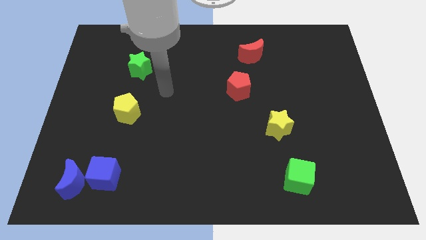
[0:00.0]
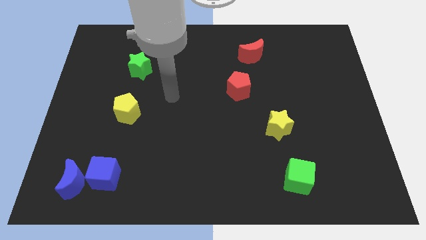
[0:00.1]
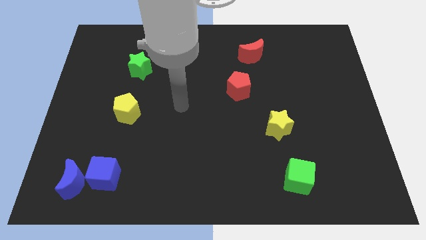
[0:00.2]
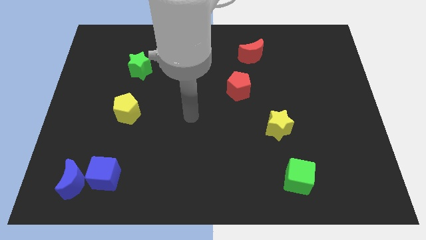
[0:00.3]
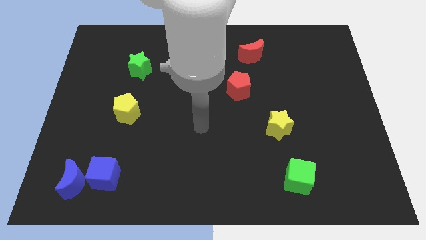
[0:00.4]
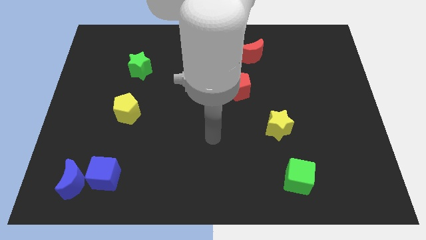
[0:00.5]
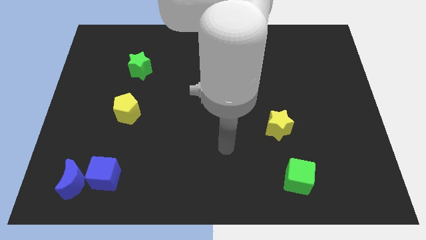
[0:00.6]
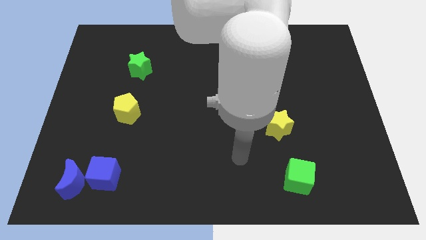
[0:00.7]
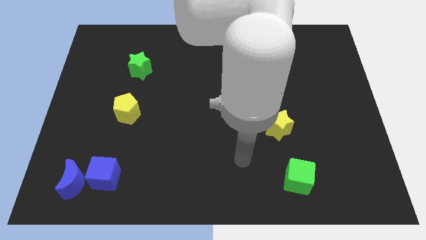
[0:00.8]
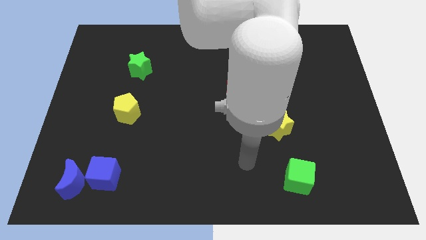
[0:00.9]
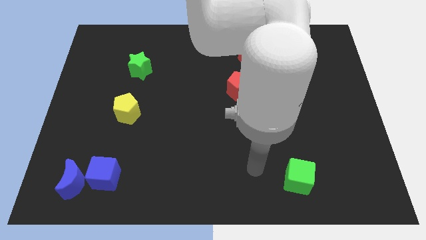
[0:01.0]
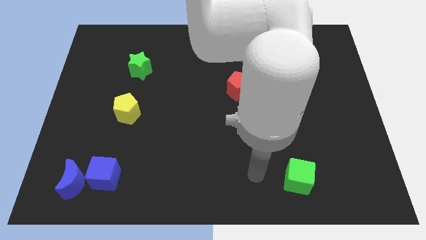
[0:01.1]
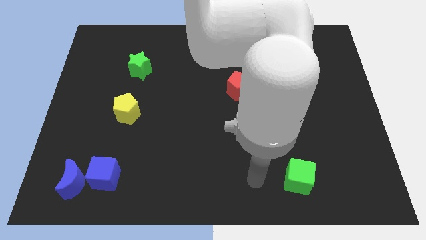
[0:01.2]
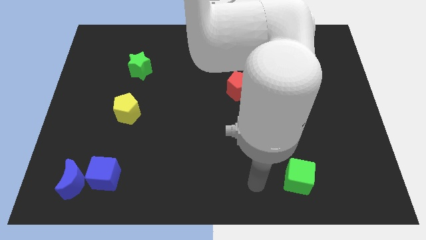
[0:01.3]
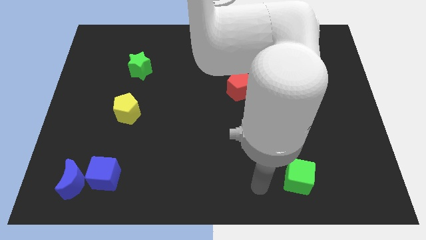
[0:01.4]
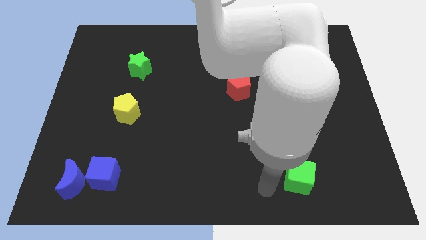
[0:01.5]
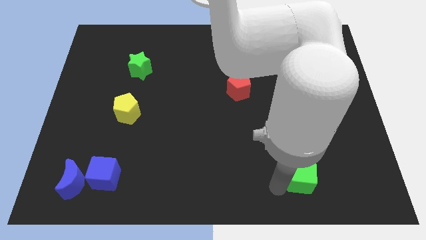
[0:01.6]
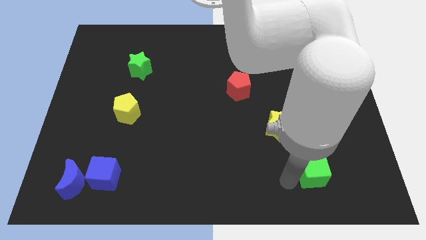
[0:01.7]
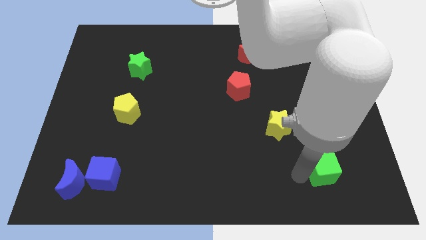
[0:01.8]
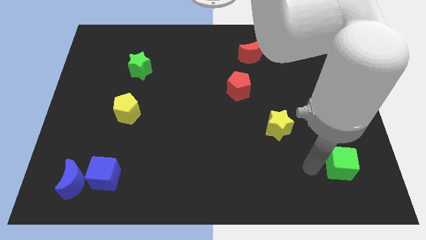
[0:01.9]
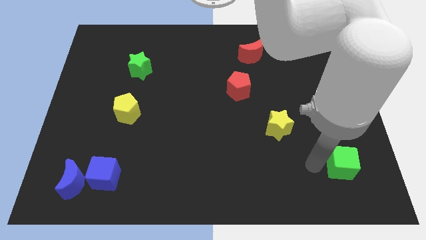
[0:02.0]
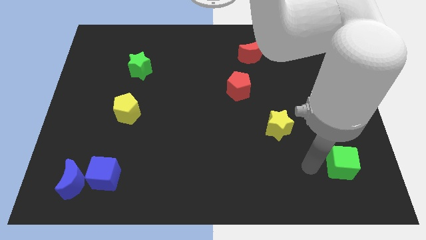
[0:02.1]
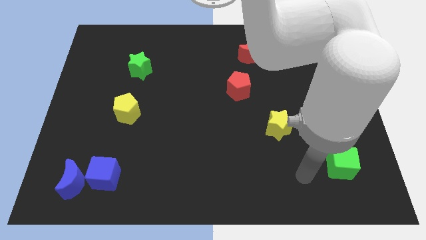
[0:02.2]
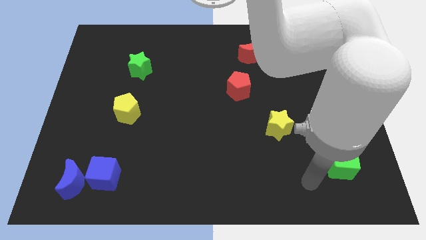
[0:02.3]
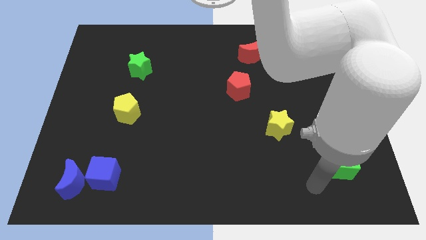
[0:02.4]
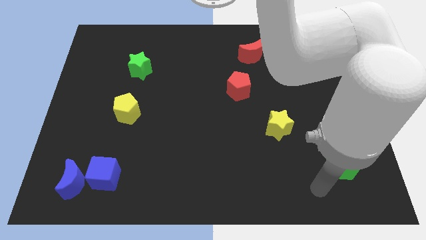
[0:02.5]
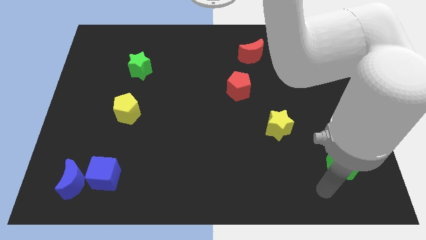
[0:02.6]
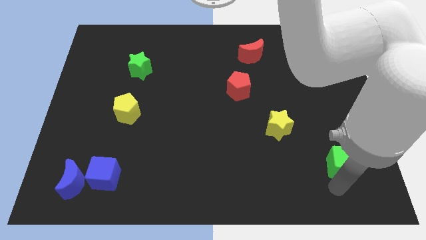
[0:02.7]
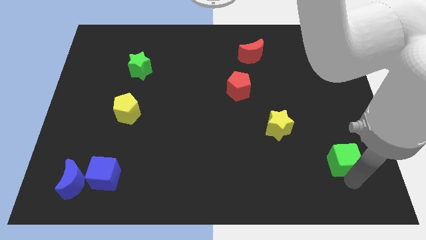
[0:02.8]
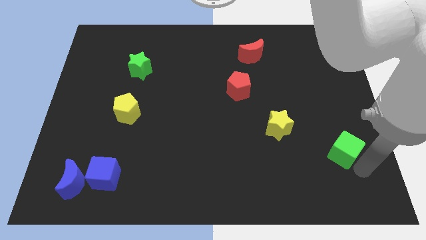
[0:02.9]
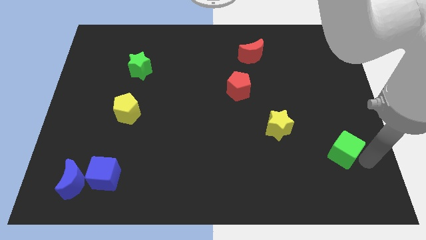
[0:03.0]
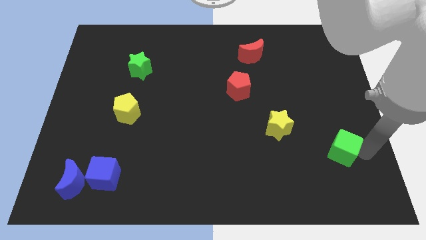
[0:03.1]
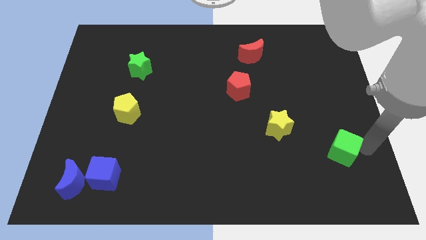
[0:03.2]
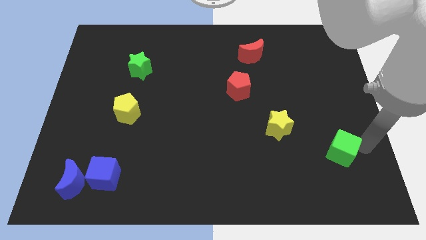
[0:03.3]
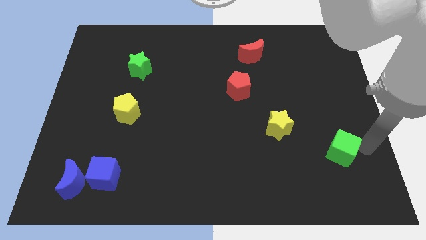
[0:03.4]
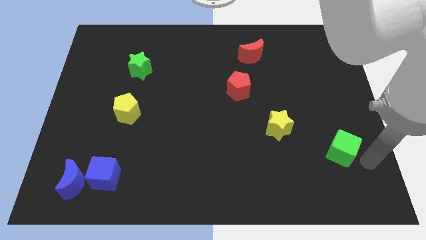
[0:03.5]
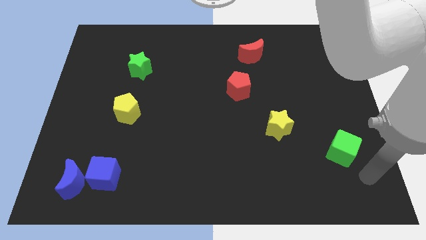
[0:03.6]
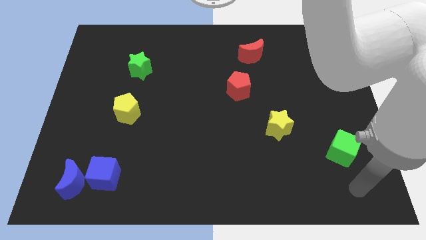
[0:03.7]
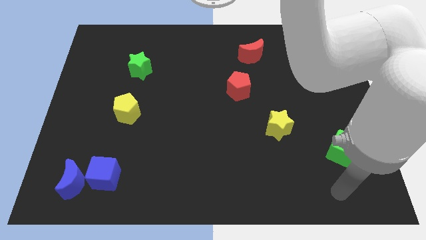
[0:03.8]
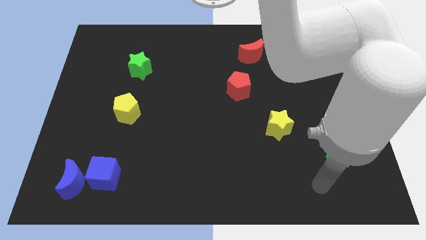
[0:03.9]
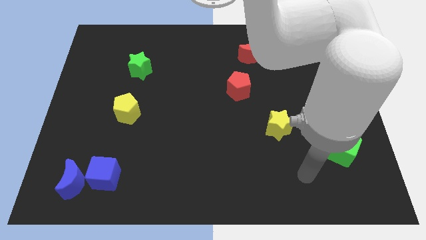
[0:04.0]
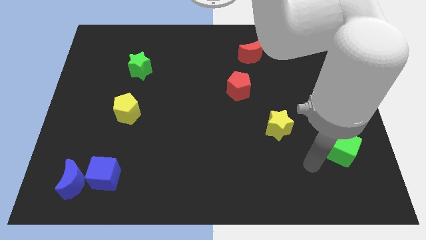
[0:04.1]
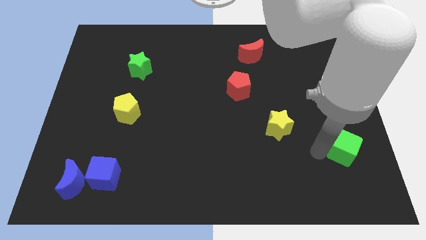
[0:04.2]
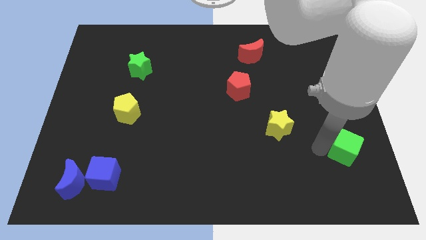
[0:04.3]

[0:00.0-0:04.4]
push the green cube towards the center right side of the board

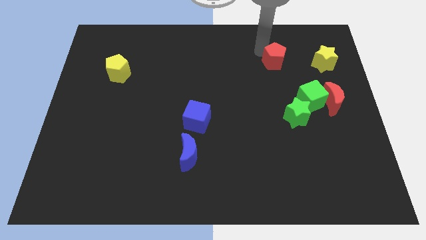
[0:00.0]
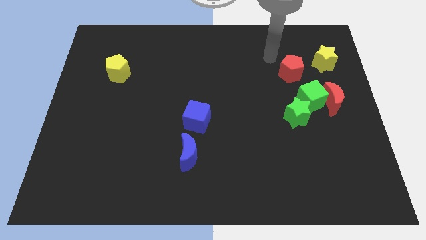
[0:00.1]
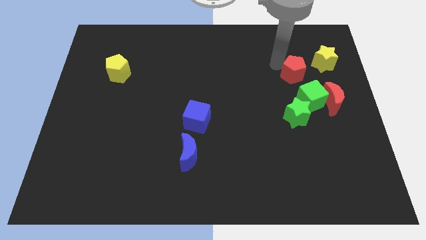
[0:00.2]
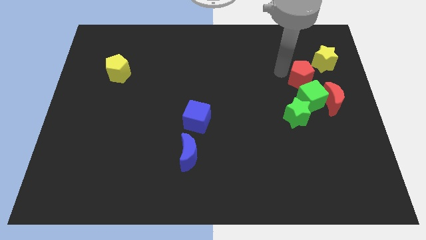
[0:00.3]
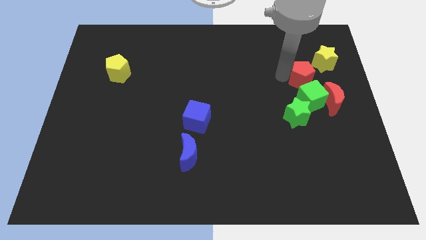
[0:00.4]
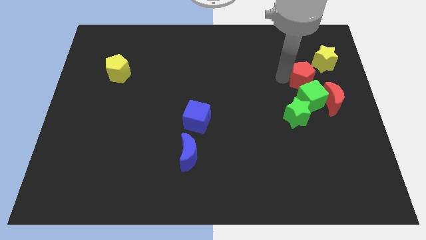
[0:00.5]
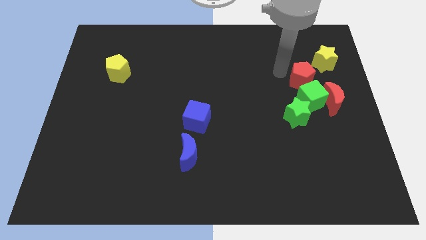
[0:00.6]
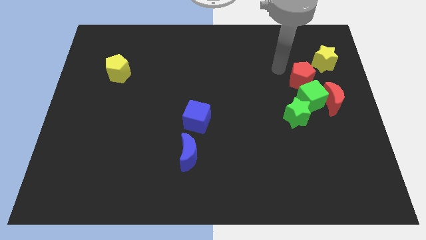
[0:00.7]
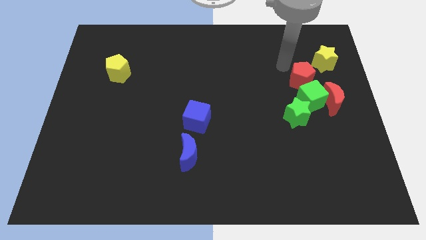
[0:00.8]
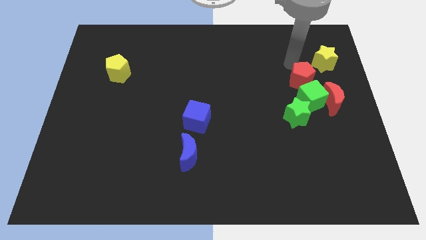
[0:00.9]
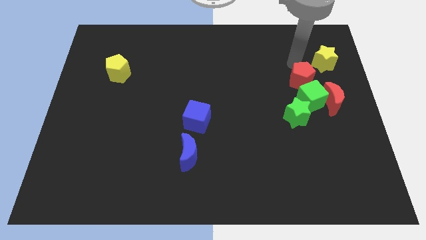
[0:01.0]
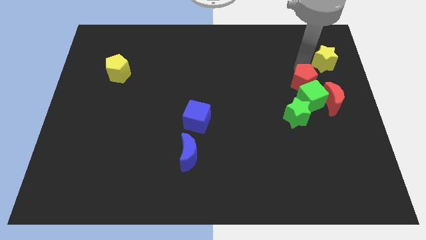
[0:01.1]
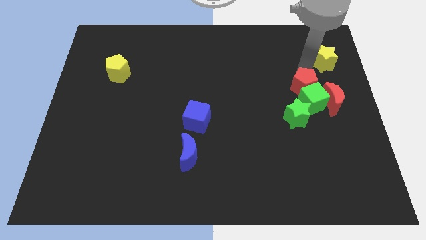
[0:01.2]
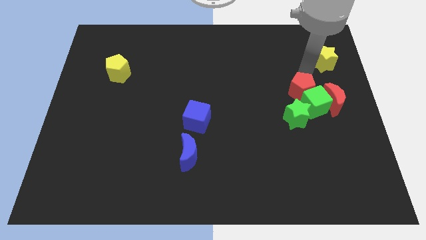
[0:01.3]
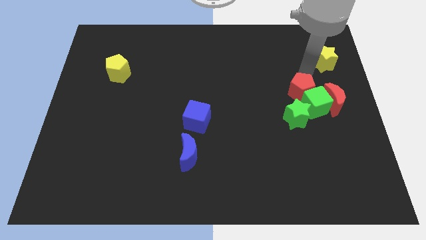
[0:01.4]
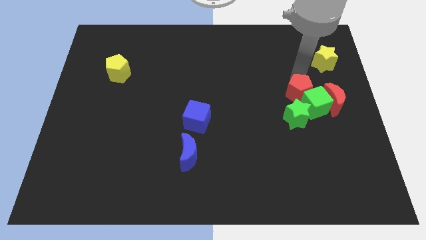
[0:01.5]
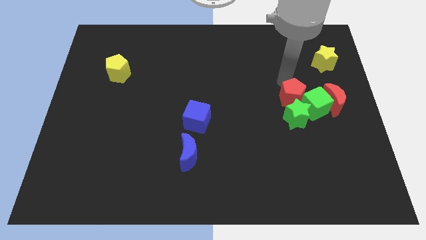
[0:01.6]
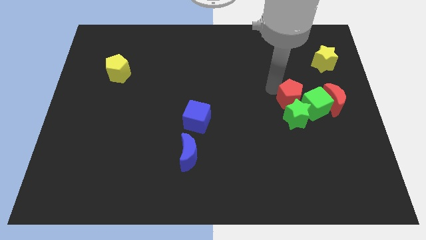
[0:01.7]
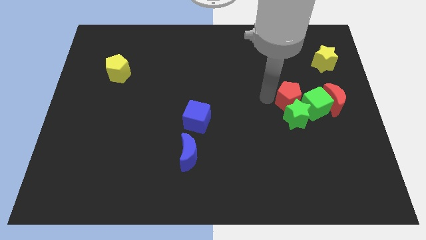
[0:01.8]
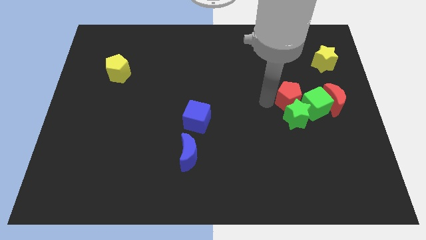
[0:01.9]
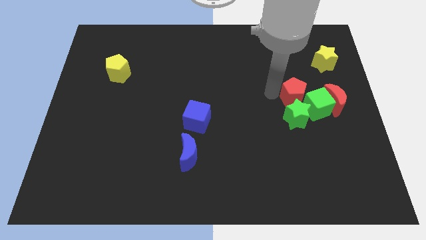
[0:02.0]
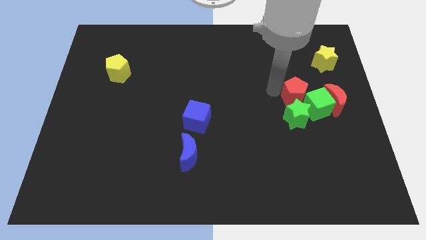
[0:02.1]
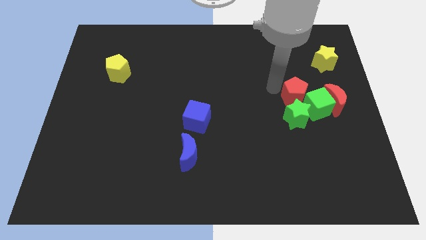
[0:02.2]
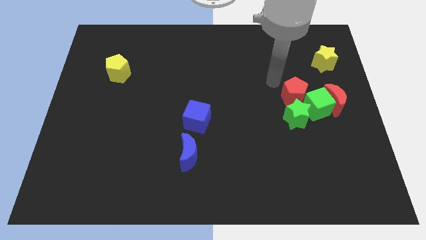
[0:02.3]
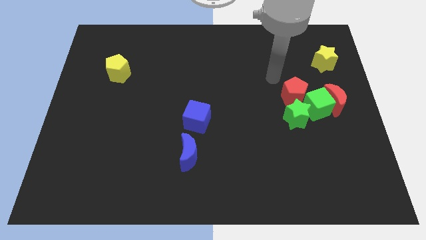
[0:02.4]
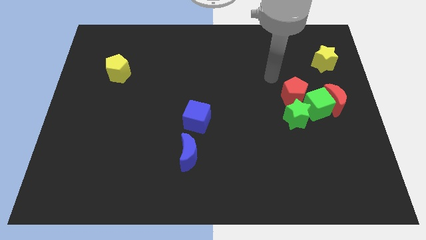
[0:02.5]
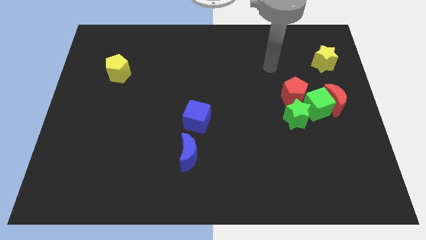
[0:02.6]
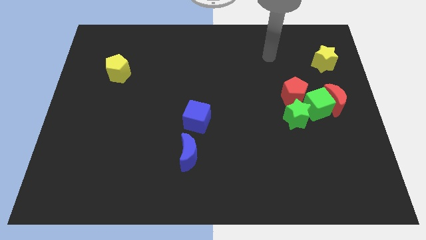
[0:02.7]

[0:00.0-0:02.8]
place red pentagon above green star

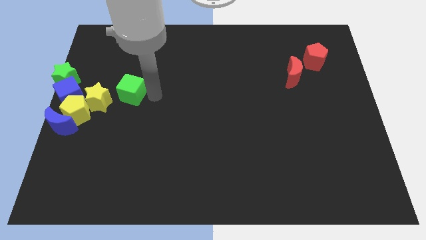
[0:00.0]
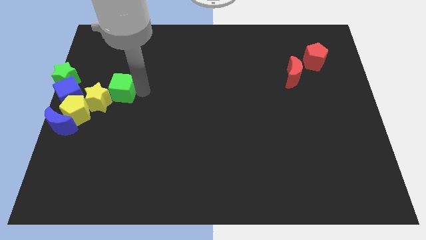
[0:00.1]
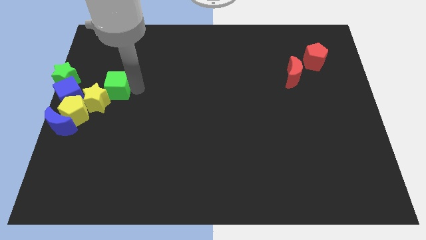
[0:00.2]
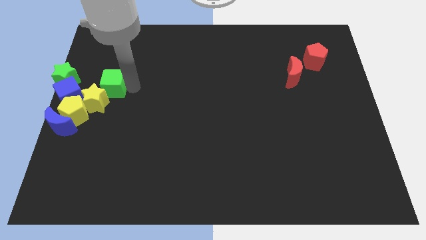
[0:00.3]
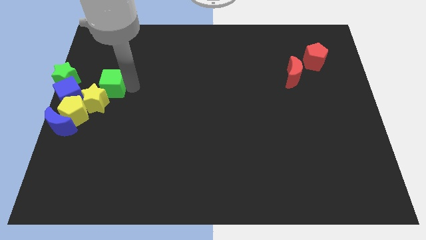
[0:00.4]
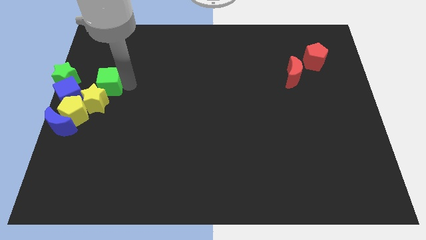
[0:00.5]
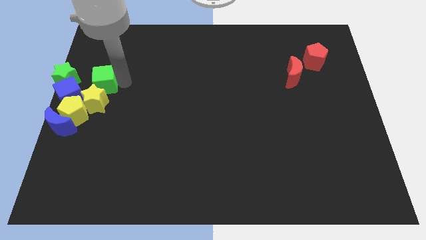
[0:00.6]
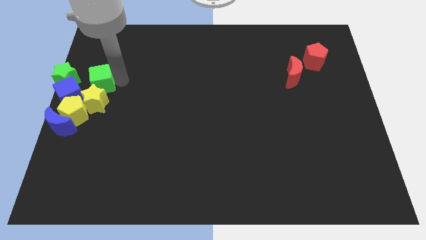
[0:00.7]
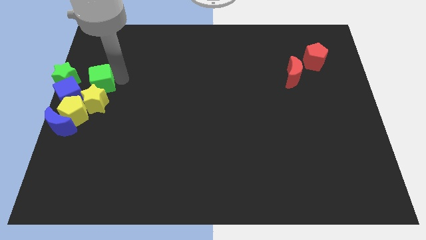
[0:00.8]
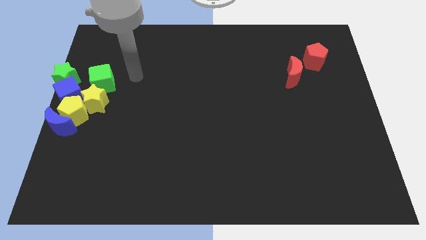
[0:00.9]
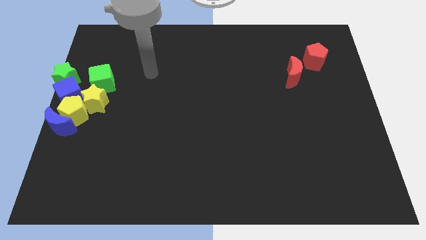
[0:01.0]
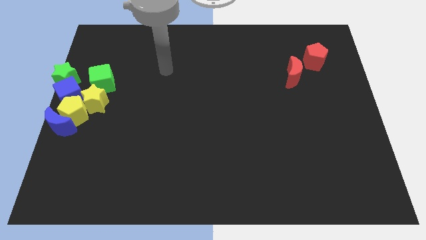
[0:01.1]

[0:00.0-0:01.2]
place the green cube to the right of the green star

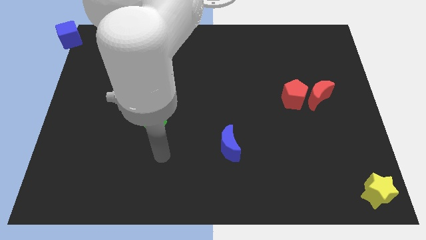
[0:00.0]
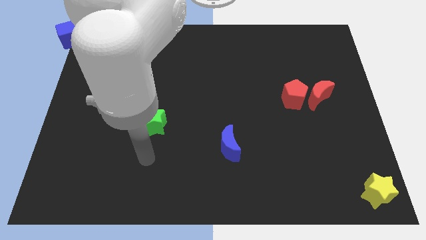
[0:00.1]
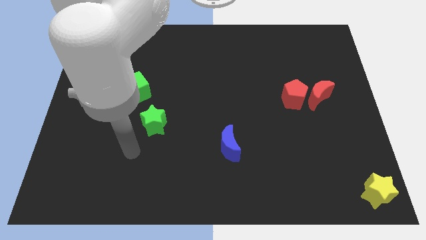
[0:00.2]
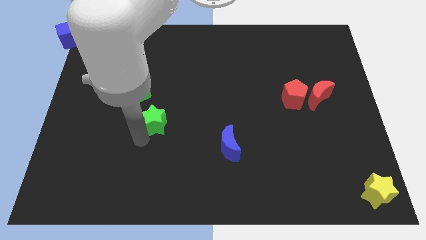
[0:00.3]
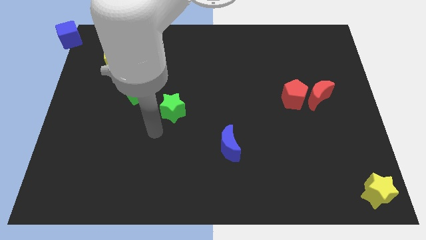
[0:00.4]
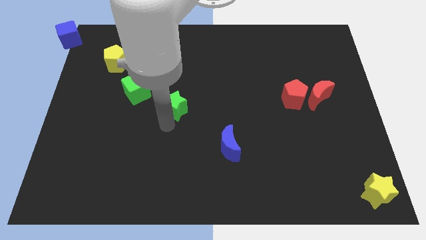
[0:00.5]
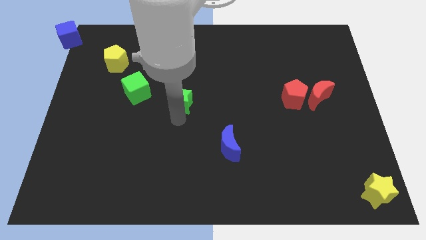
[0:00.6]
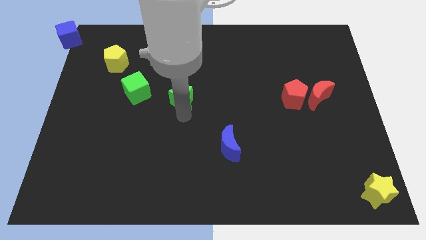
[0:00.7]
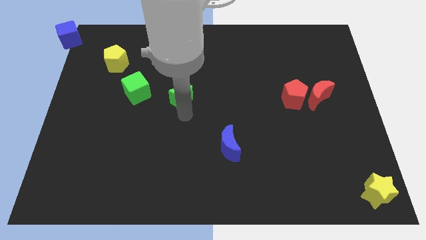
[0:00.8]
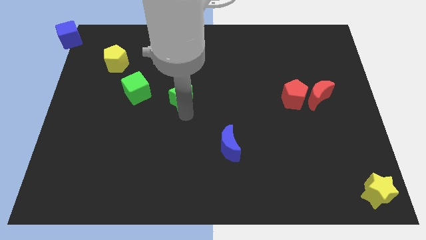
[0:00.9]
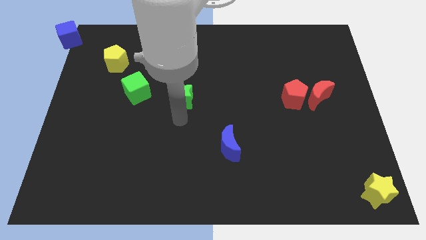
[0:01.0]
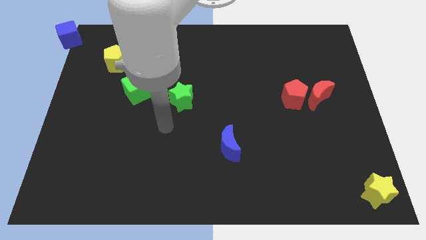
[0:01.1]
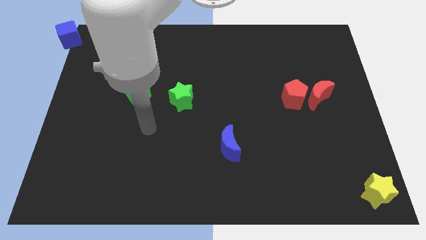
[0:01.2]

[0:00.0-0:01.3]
move the green star to the center of the board
